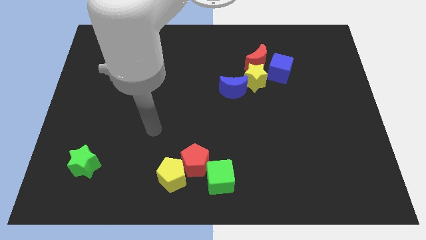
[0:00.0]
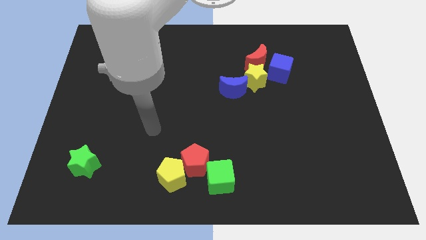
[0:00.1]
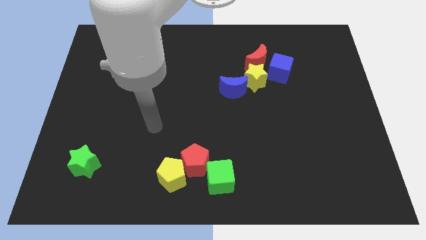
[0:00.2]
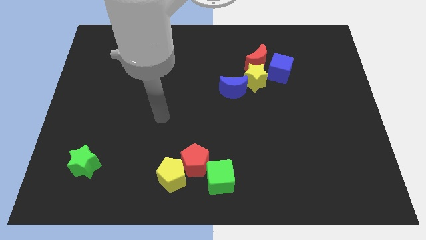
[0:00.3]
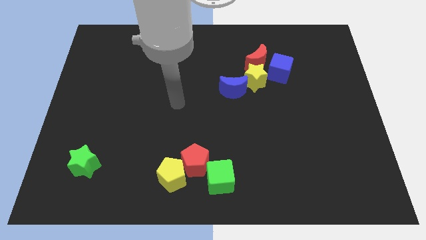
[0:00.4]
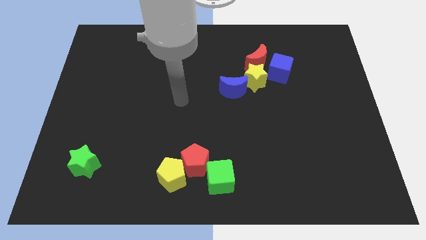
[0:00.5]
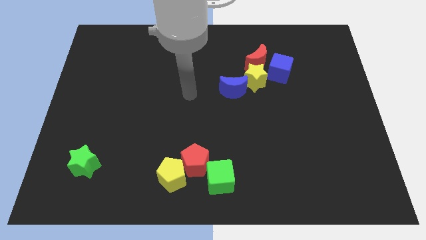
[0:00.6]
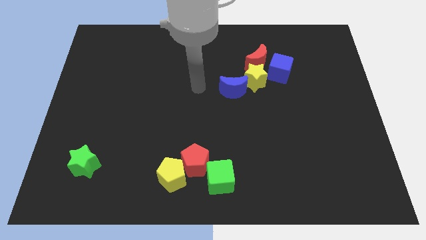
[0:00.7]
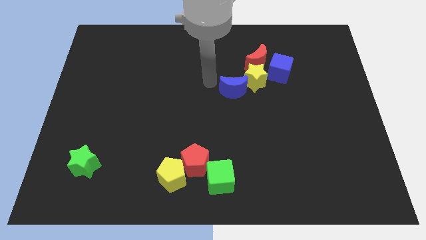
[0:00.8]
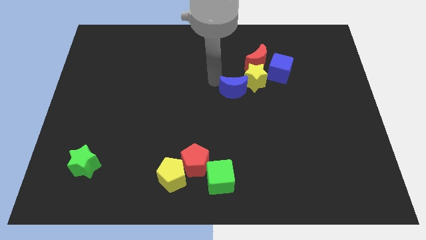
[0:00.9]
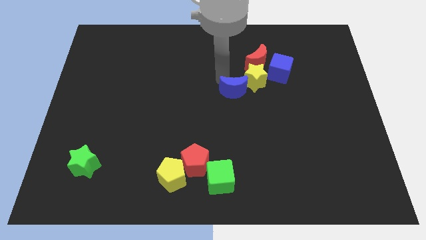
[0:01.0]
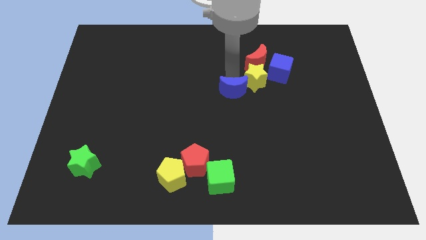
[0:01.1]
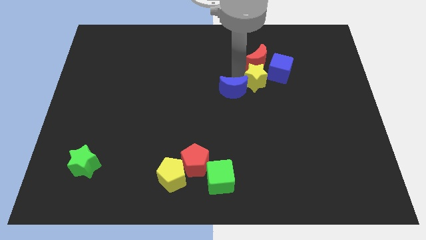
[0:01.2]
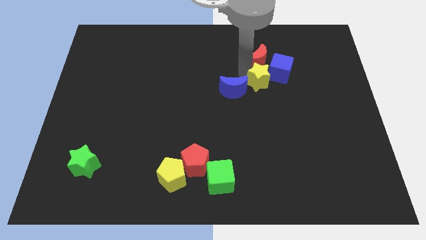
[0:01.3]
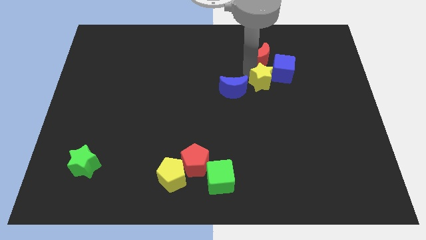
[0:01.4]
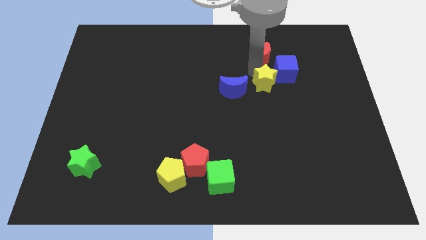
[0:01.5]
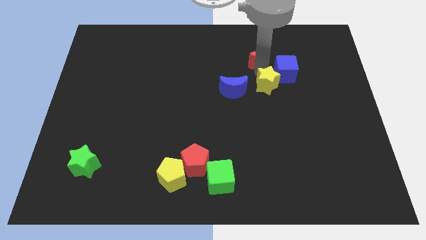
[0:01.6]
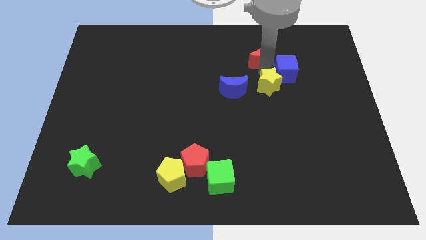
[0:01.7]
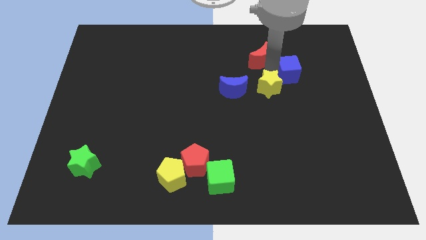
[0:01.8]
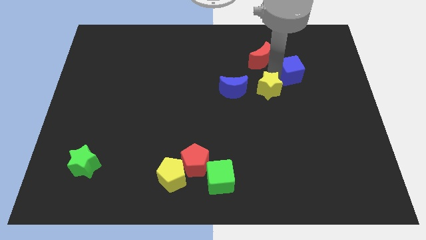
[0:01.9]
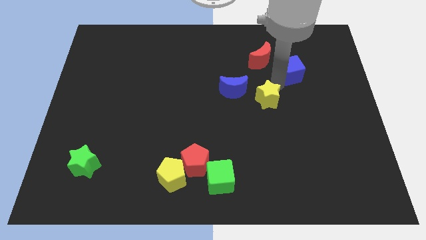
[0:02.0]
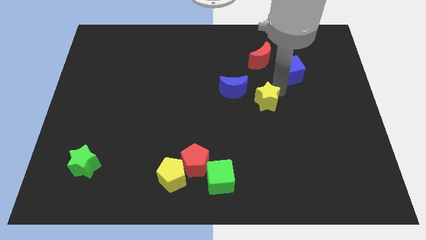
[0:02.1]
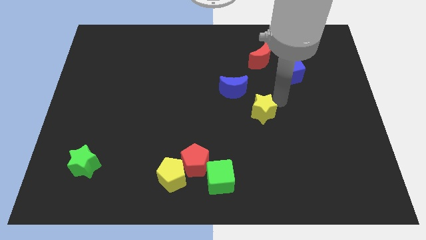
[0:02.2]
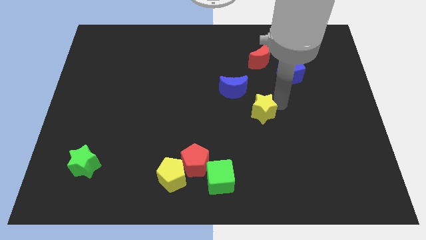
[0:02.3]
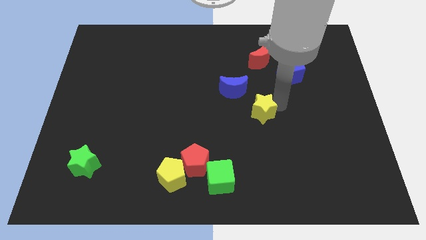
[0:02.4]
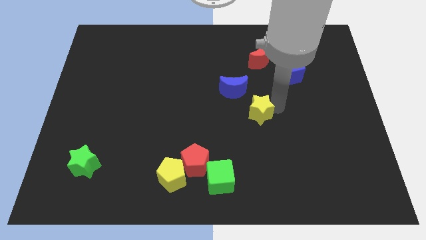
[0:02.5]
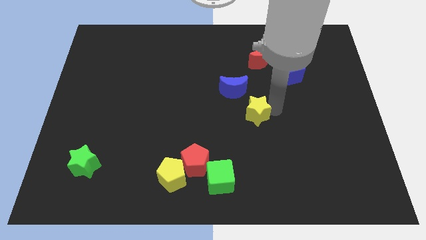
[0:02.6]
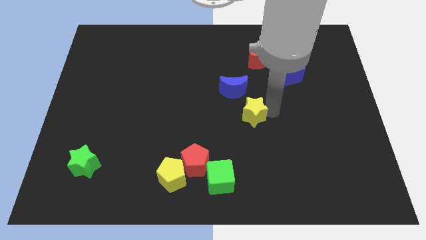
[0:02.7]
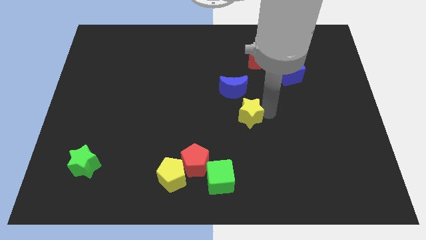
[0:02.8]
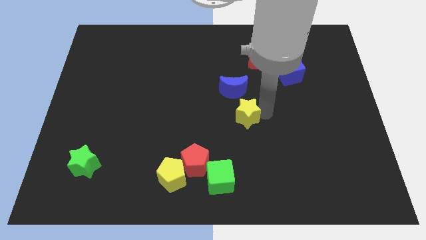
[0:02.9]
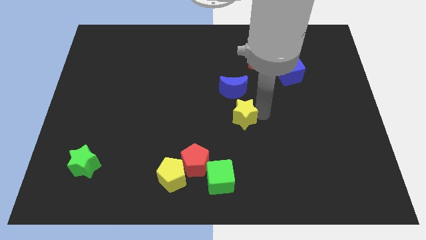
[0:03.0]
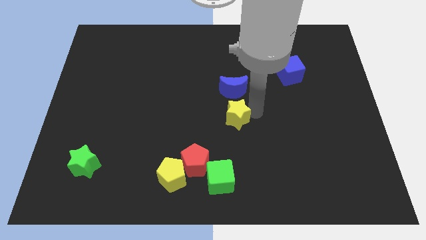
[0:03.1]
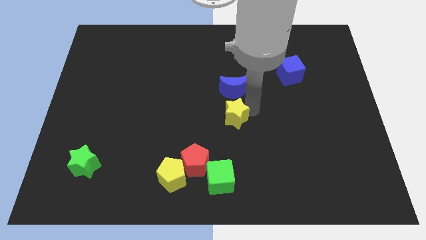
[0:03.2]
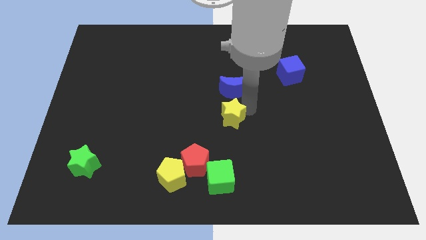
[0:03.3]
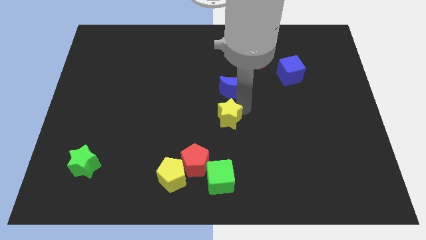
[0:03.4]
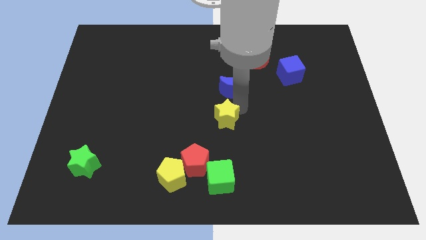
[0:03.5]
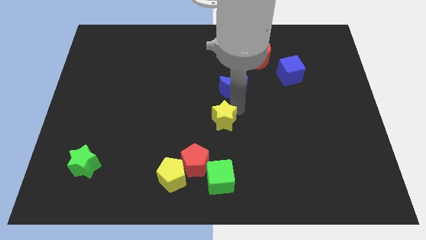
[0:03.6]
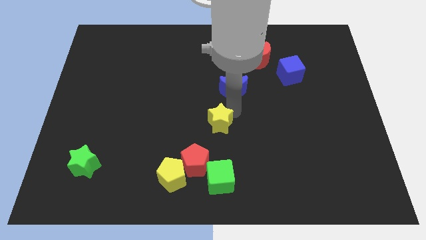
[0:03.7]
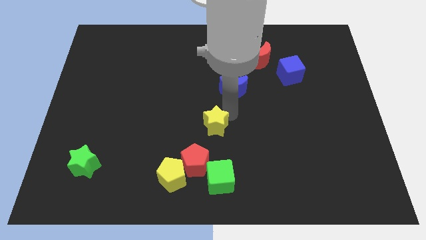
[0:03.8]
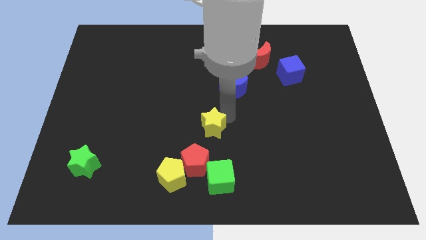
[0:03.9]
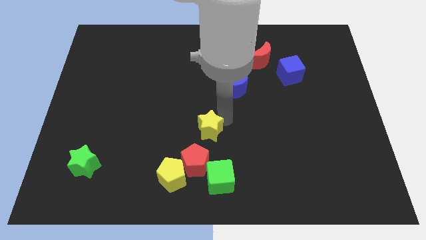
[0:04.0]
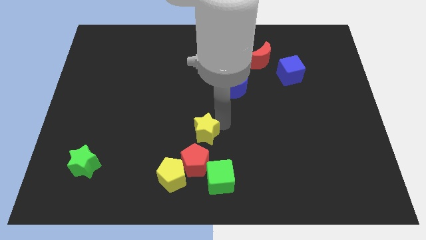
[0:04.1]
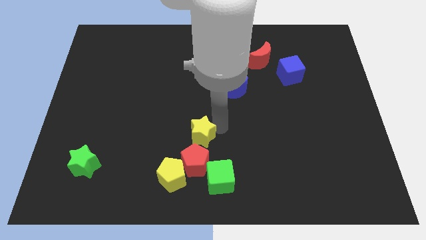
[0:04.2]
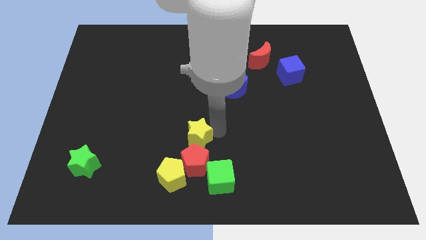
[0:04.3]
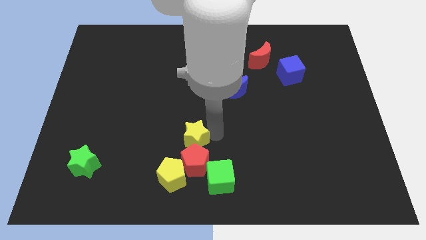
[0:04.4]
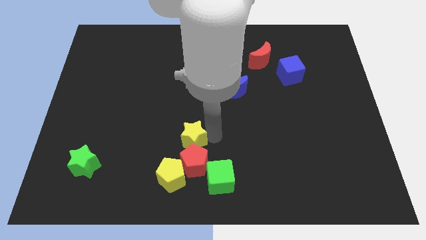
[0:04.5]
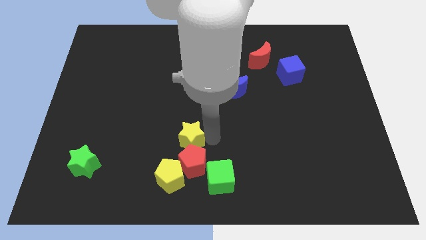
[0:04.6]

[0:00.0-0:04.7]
move the yellow star towards the red pentagon

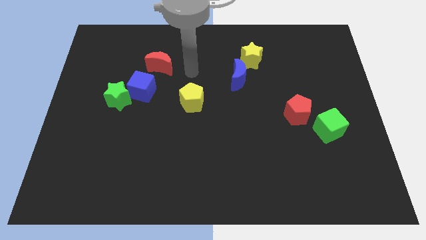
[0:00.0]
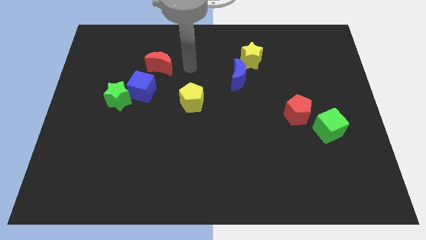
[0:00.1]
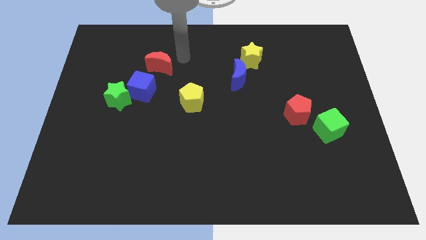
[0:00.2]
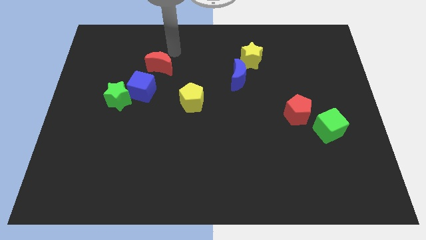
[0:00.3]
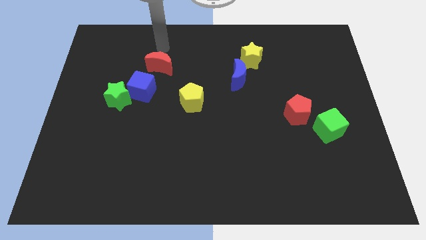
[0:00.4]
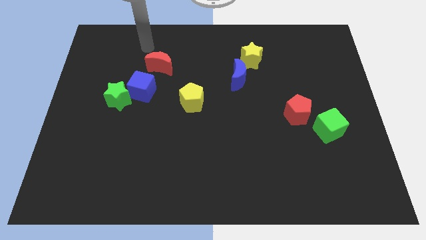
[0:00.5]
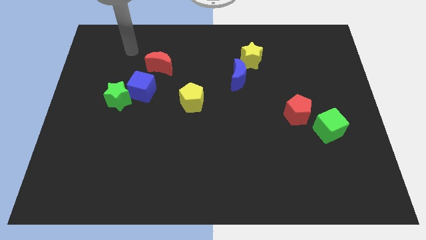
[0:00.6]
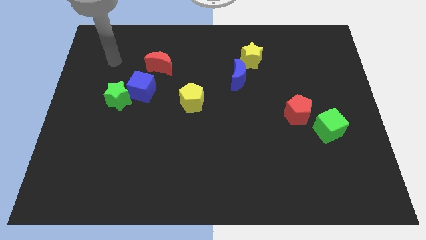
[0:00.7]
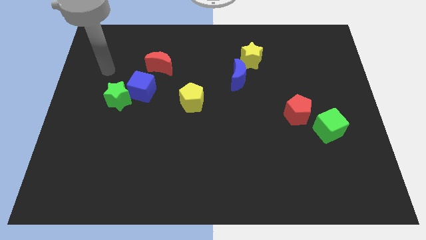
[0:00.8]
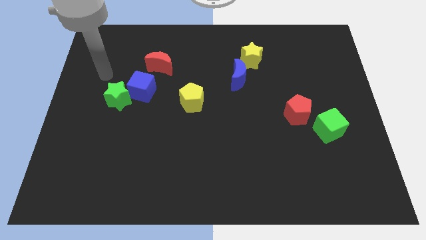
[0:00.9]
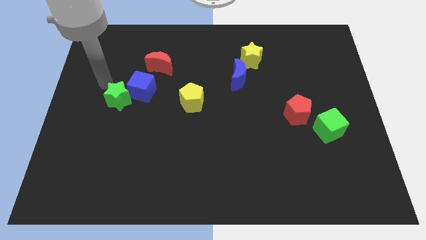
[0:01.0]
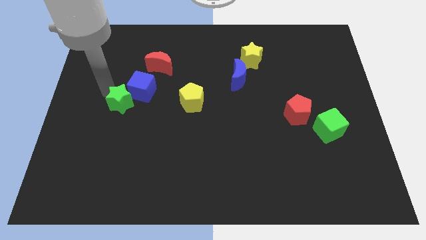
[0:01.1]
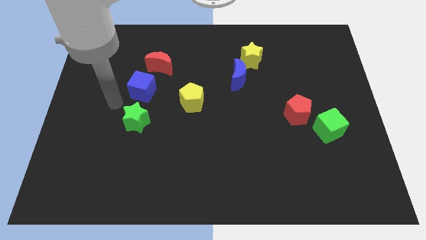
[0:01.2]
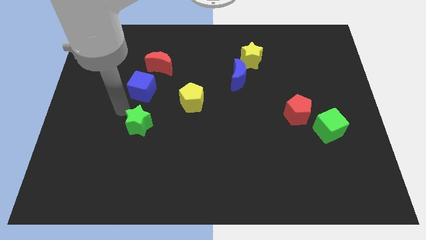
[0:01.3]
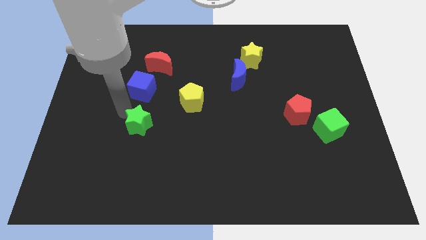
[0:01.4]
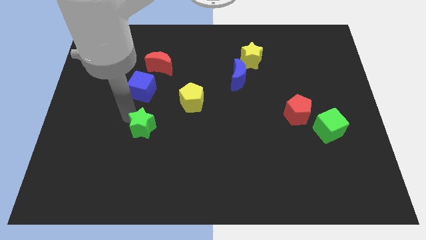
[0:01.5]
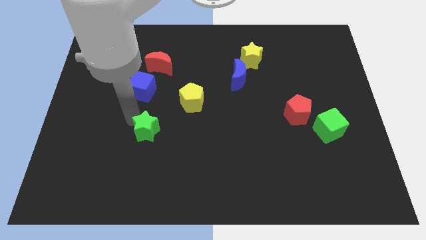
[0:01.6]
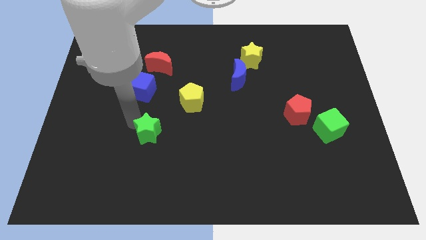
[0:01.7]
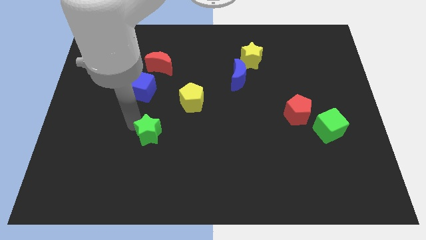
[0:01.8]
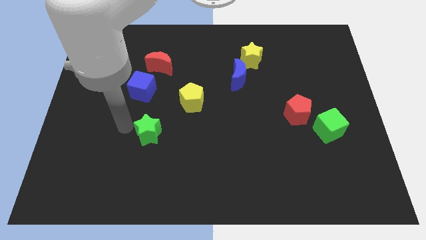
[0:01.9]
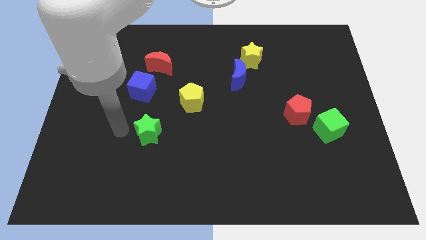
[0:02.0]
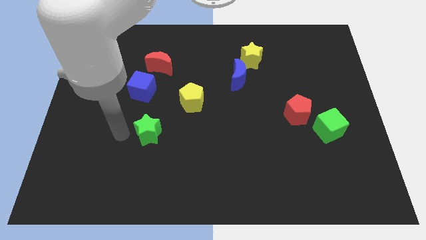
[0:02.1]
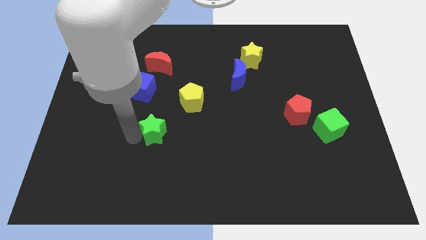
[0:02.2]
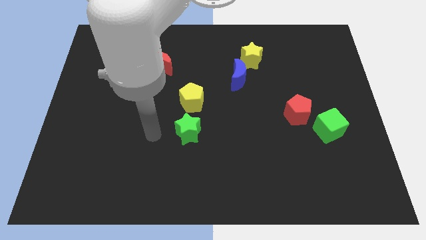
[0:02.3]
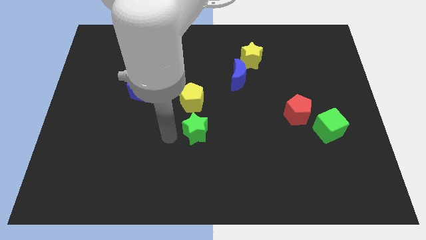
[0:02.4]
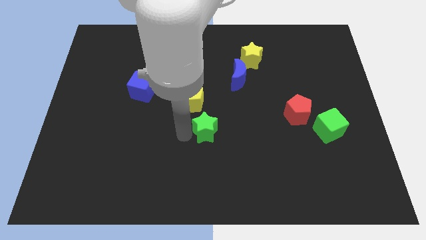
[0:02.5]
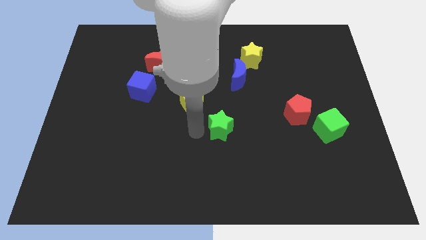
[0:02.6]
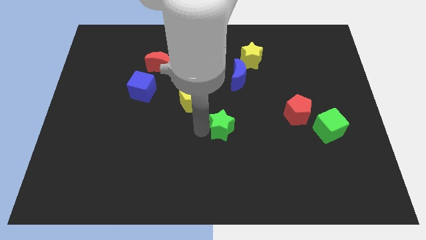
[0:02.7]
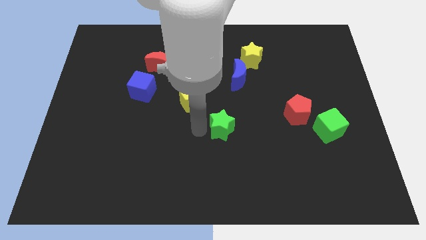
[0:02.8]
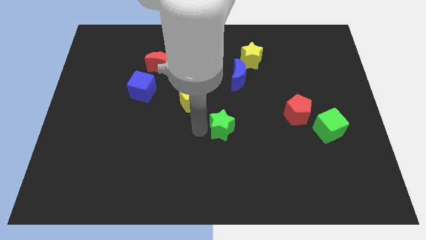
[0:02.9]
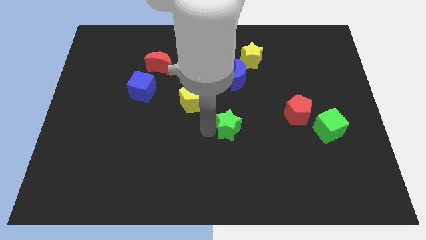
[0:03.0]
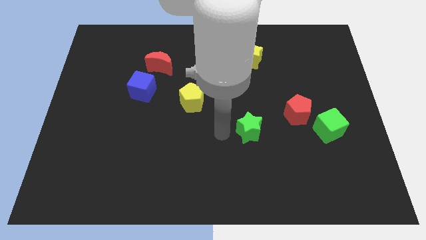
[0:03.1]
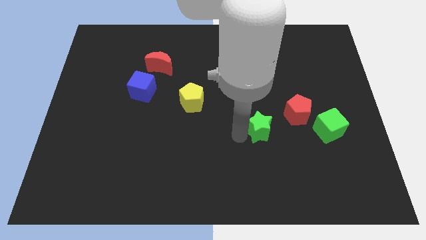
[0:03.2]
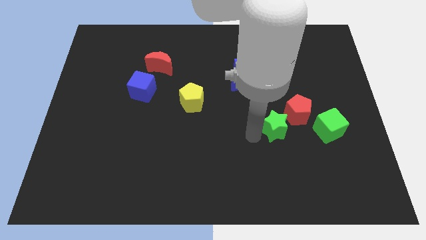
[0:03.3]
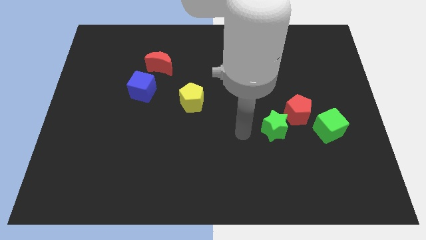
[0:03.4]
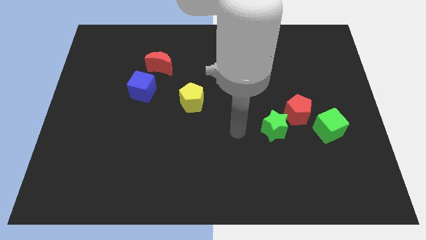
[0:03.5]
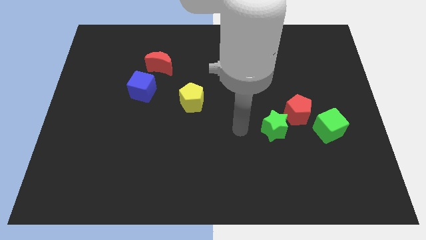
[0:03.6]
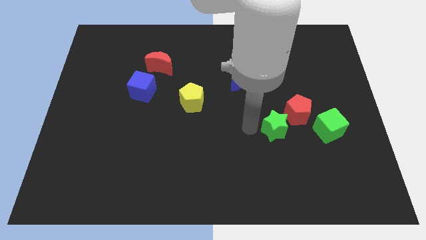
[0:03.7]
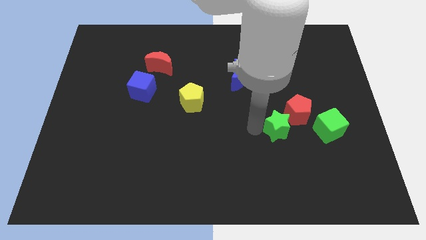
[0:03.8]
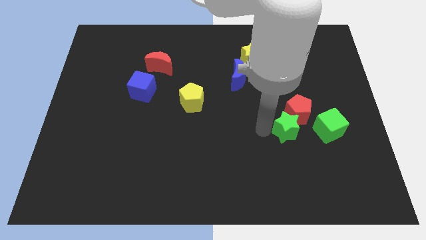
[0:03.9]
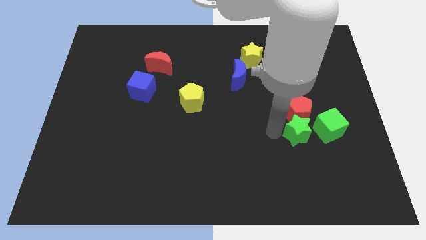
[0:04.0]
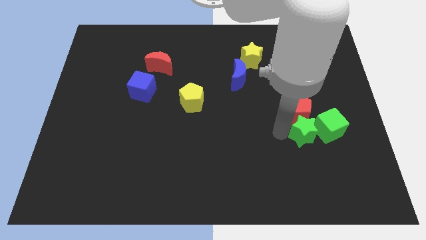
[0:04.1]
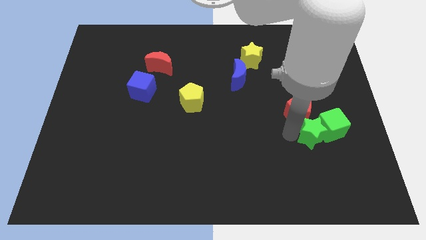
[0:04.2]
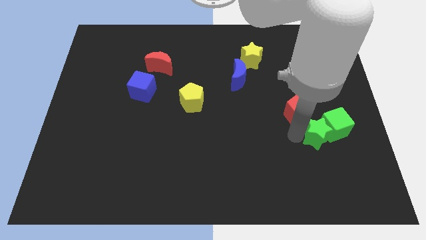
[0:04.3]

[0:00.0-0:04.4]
slide the green star next to the green cube
